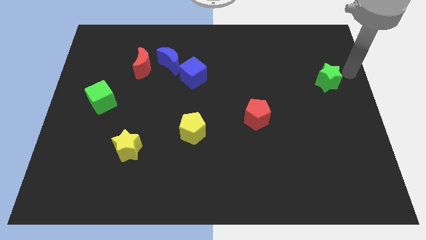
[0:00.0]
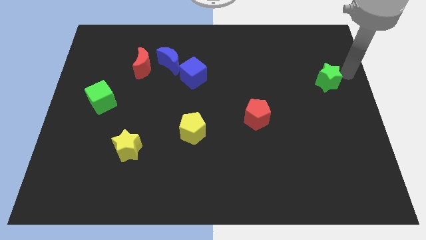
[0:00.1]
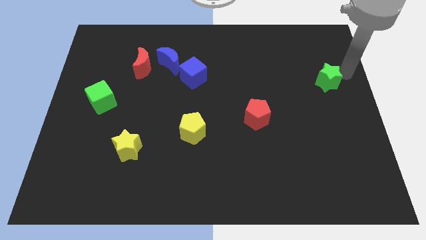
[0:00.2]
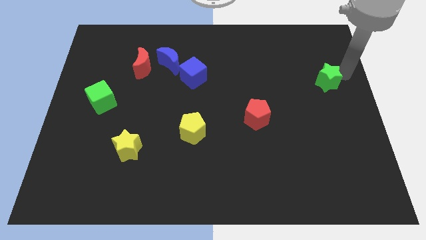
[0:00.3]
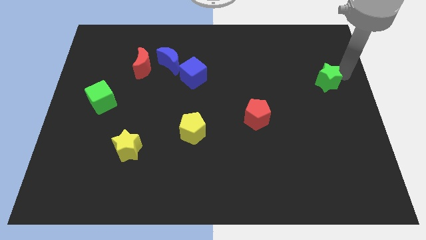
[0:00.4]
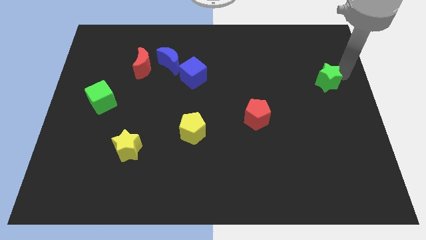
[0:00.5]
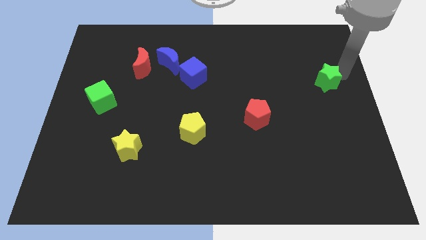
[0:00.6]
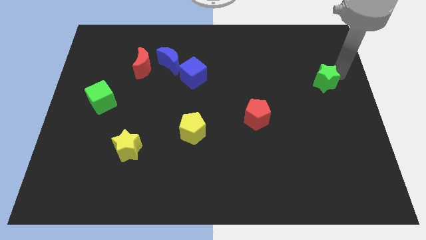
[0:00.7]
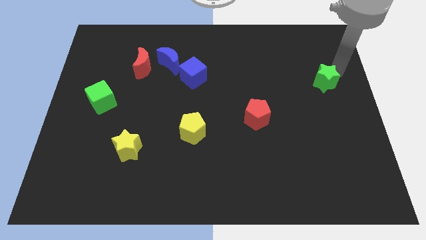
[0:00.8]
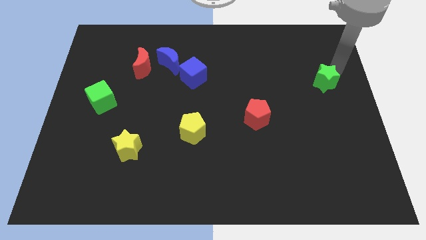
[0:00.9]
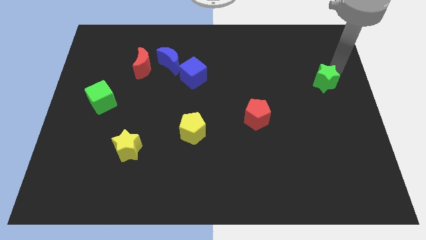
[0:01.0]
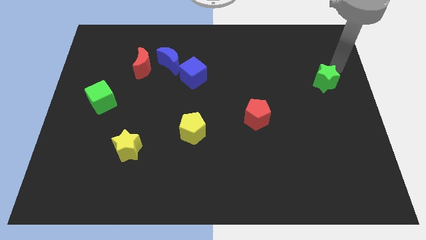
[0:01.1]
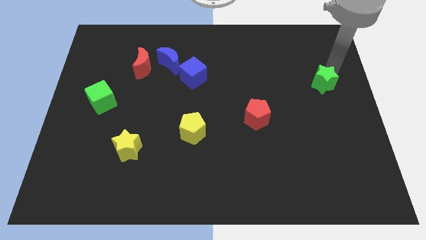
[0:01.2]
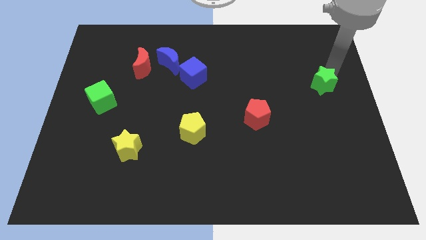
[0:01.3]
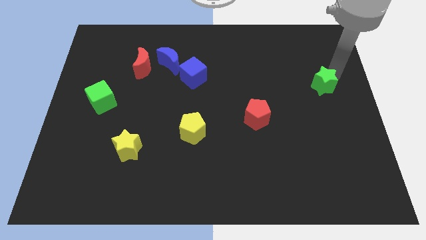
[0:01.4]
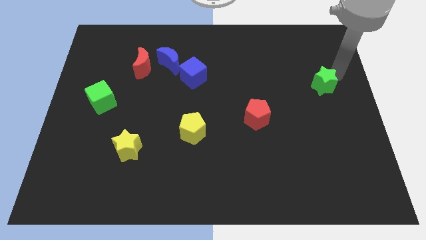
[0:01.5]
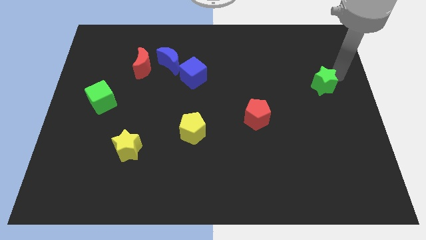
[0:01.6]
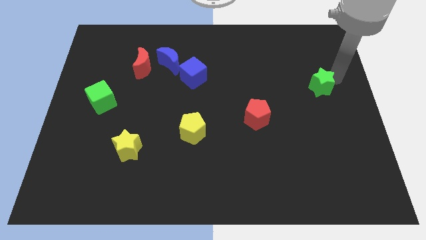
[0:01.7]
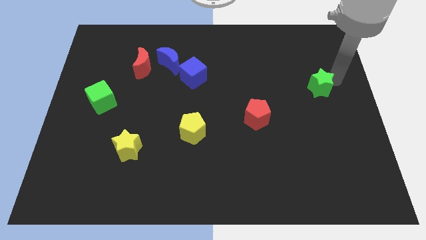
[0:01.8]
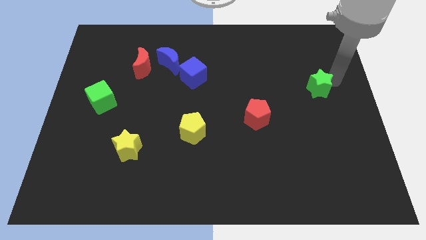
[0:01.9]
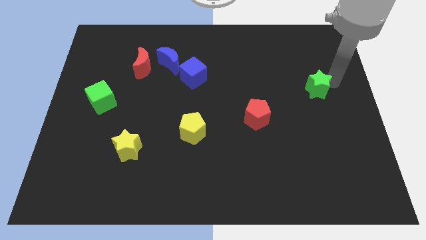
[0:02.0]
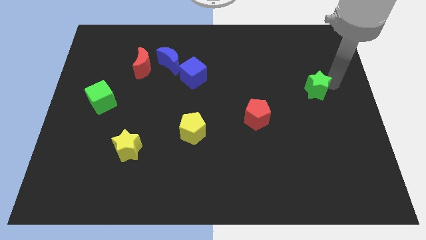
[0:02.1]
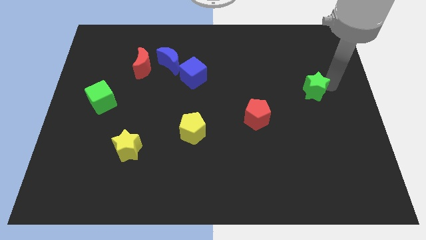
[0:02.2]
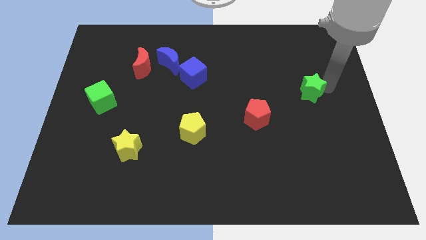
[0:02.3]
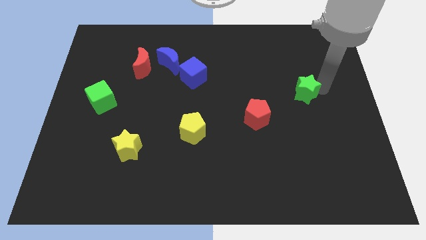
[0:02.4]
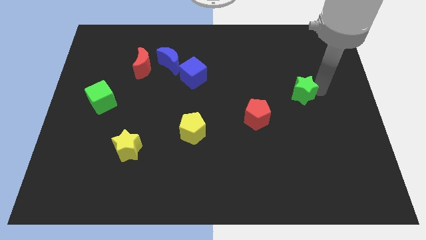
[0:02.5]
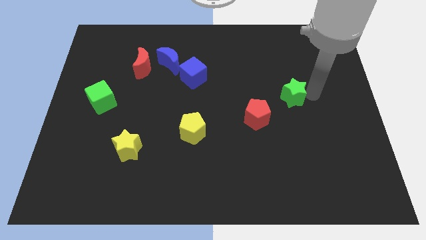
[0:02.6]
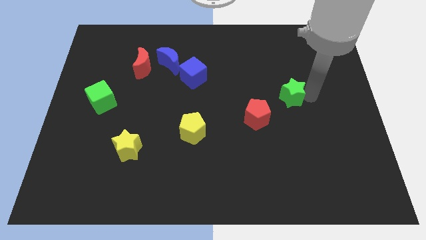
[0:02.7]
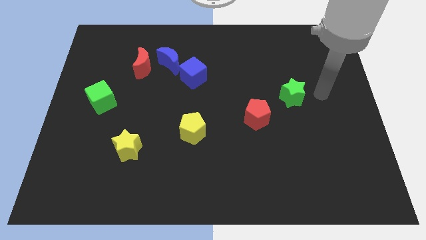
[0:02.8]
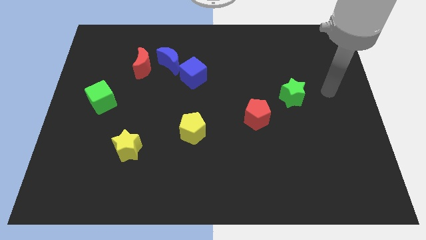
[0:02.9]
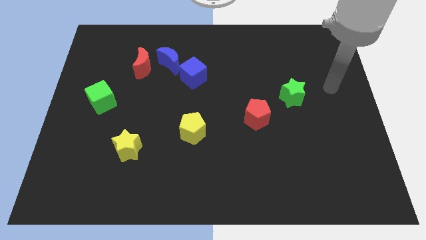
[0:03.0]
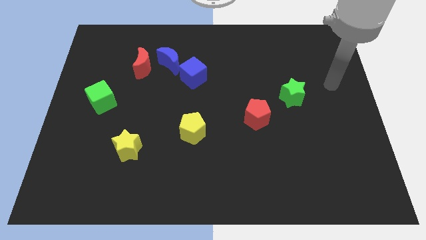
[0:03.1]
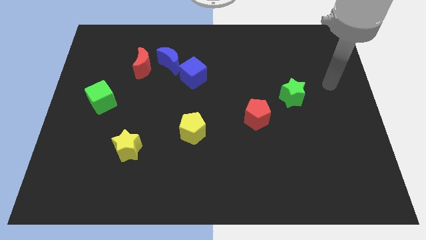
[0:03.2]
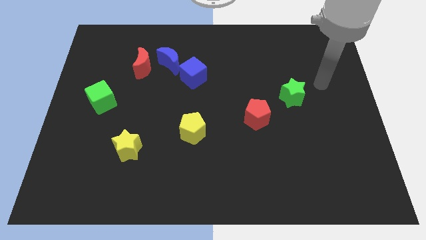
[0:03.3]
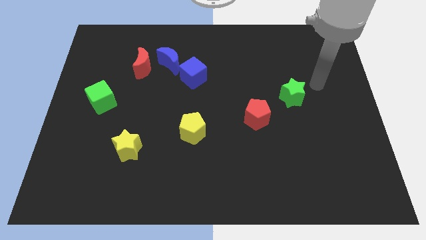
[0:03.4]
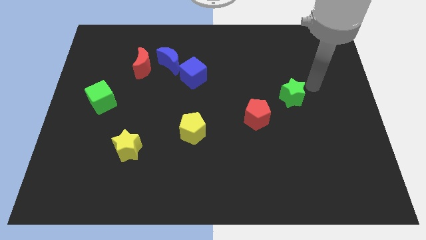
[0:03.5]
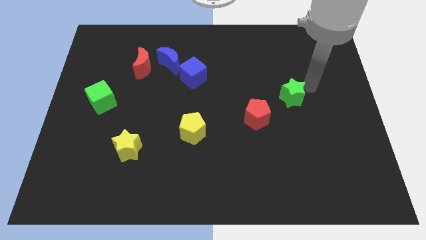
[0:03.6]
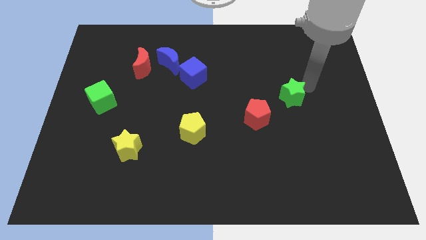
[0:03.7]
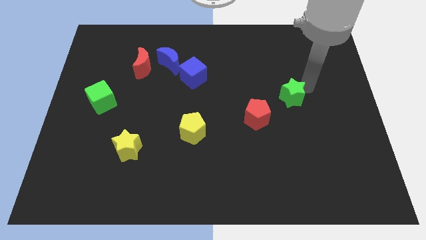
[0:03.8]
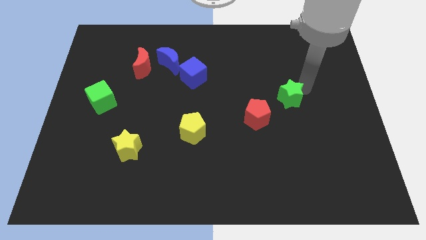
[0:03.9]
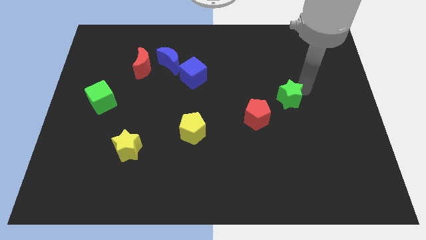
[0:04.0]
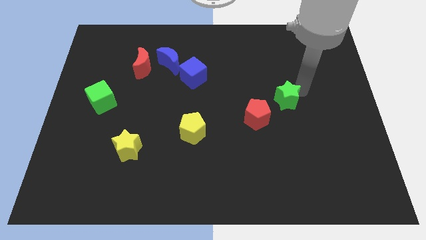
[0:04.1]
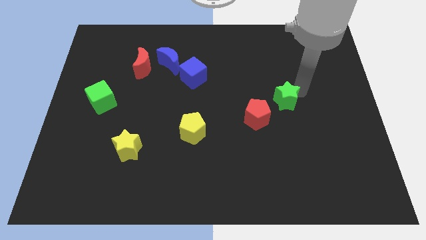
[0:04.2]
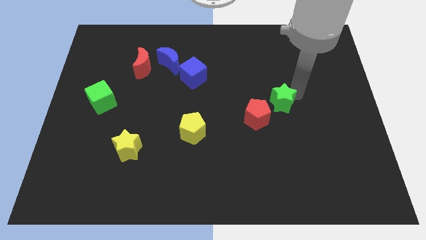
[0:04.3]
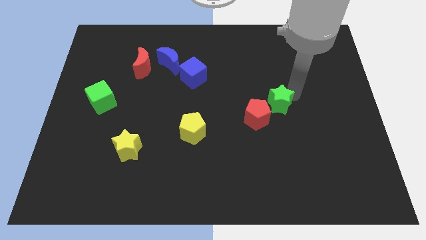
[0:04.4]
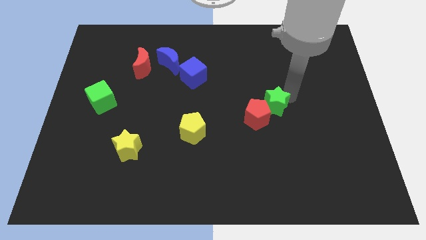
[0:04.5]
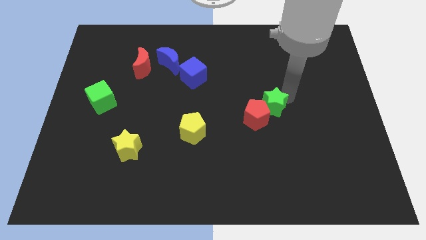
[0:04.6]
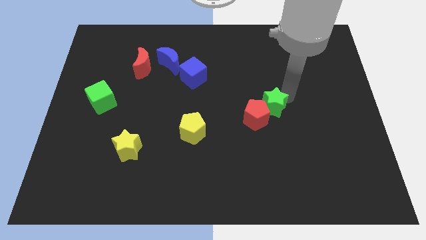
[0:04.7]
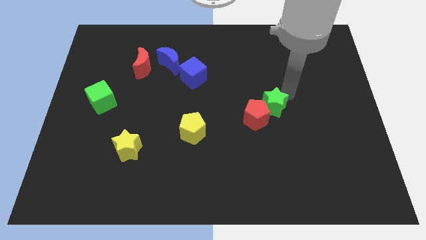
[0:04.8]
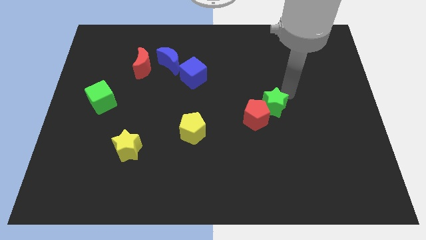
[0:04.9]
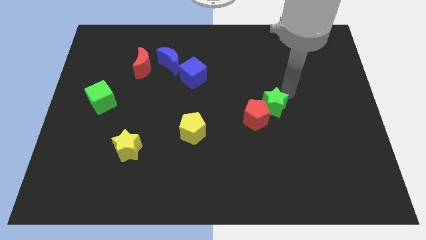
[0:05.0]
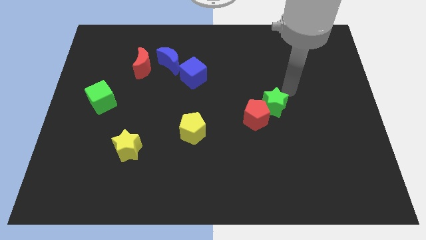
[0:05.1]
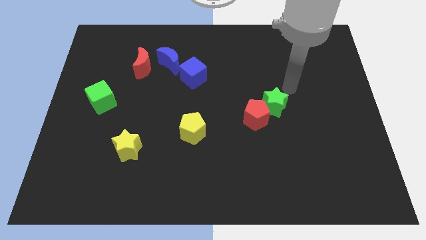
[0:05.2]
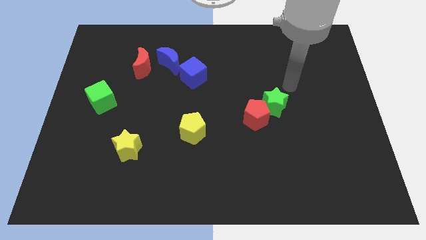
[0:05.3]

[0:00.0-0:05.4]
move green star towards red pentagon

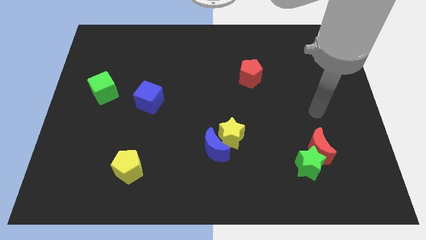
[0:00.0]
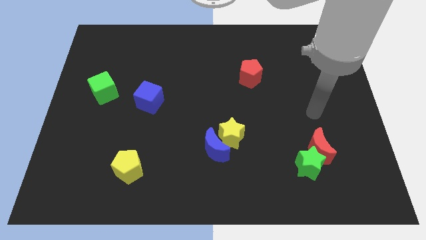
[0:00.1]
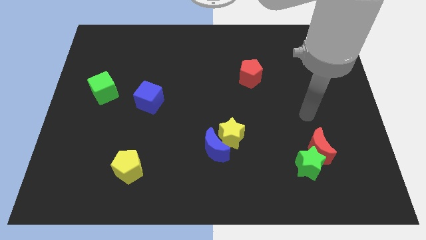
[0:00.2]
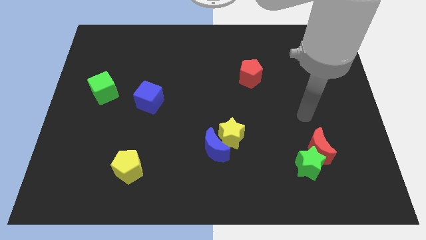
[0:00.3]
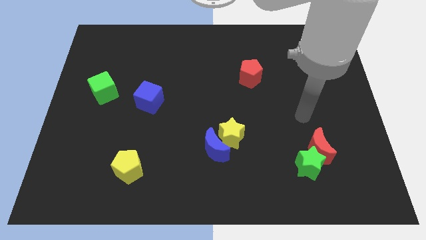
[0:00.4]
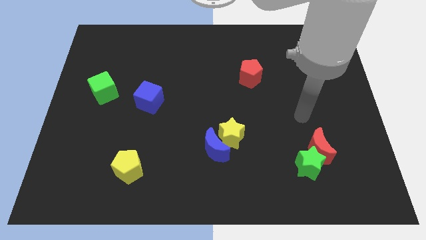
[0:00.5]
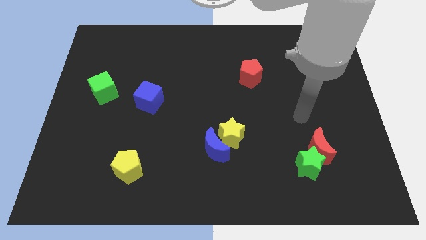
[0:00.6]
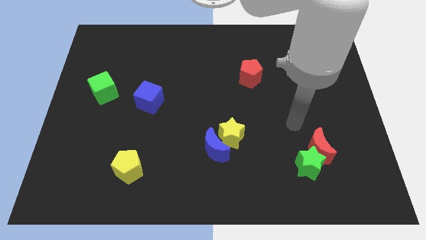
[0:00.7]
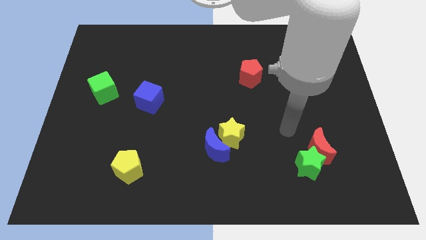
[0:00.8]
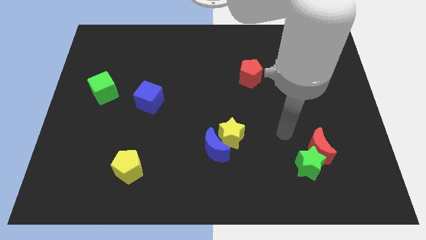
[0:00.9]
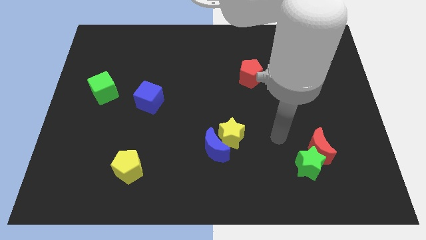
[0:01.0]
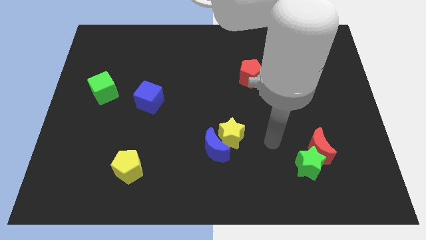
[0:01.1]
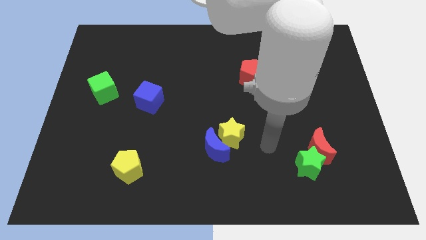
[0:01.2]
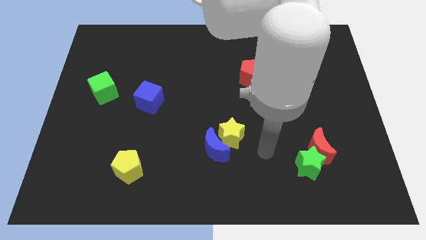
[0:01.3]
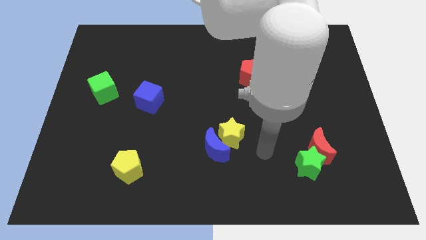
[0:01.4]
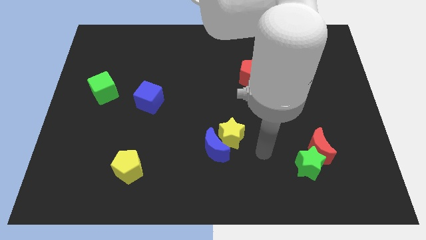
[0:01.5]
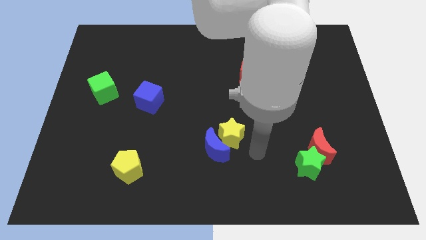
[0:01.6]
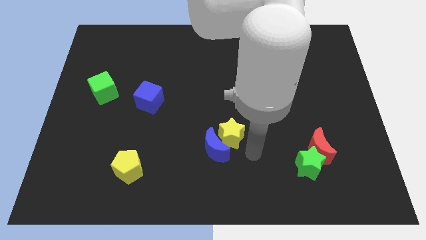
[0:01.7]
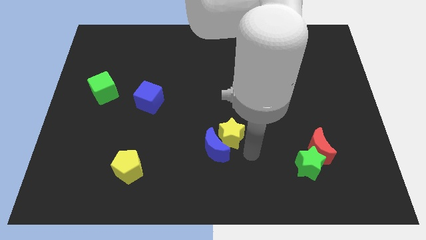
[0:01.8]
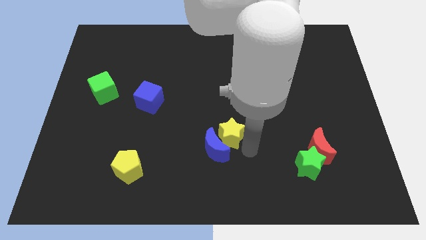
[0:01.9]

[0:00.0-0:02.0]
move your arm to the right of yellow star

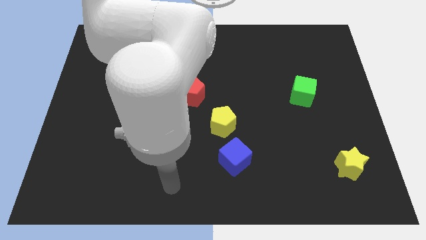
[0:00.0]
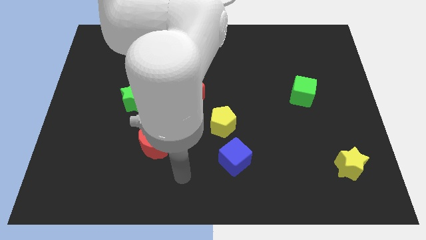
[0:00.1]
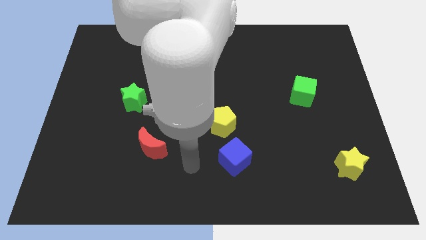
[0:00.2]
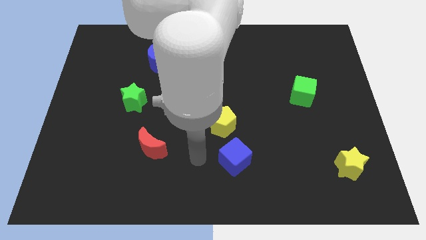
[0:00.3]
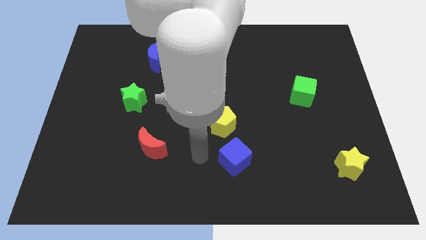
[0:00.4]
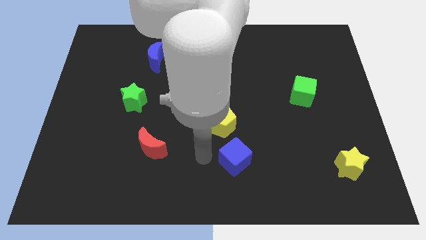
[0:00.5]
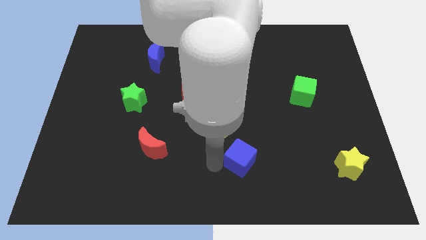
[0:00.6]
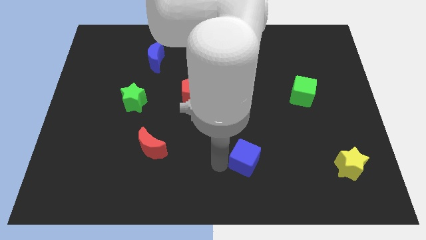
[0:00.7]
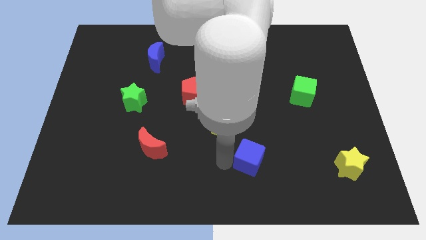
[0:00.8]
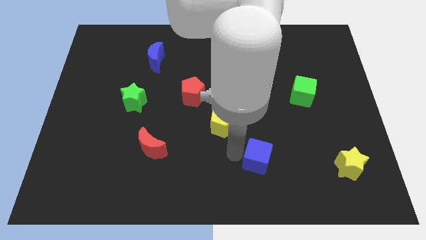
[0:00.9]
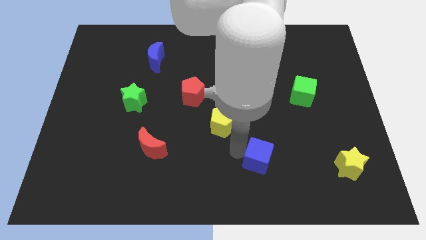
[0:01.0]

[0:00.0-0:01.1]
touch the left side of blue cube

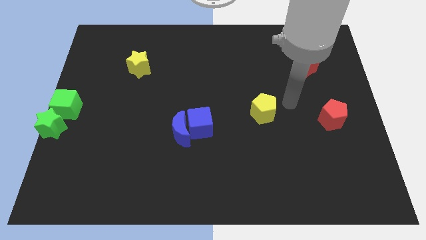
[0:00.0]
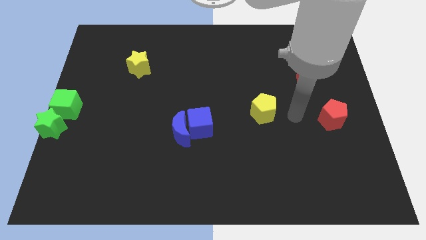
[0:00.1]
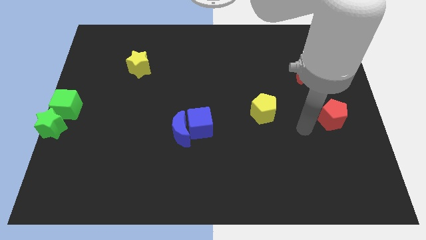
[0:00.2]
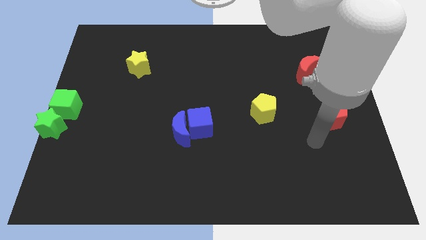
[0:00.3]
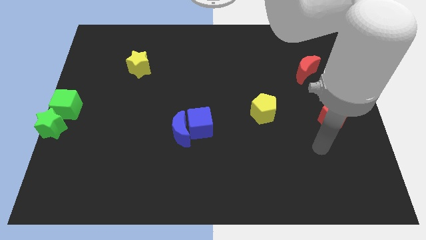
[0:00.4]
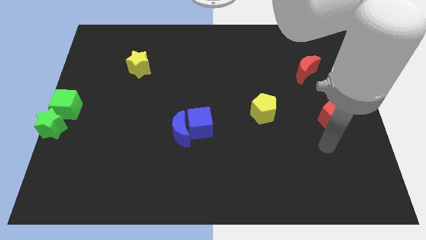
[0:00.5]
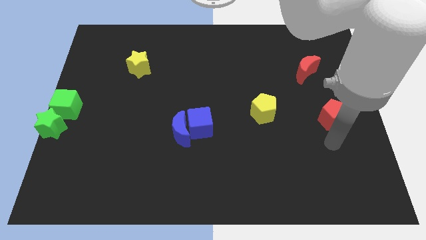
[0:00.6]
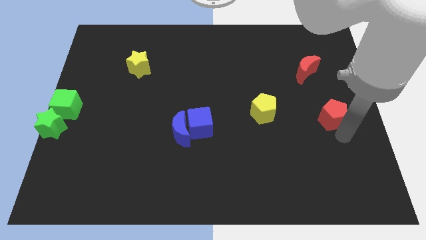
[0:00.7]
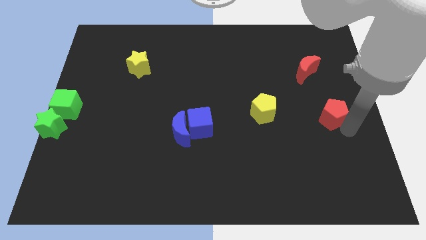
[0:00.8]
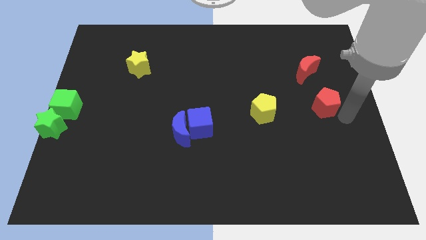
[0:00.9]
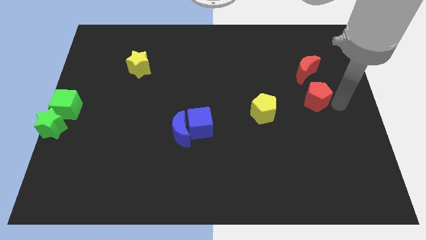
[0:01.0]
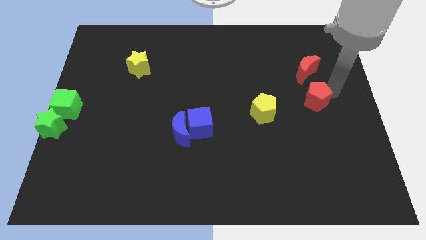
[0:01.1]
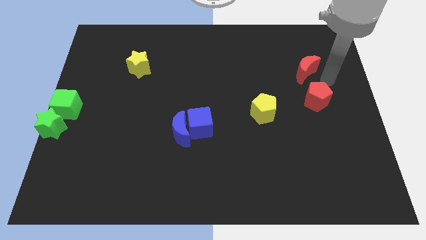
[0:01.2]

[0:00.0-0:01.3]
push the red pentagon towards the red crescent
